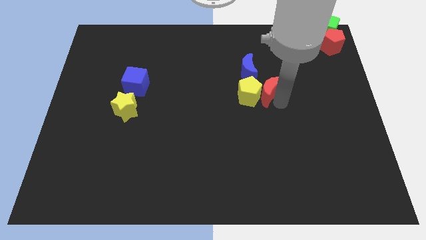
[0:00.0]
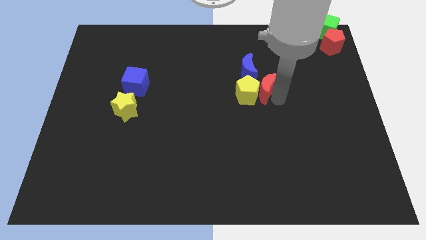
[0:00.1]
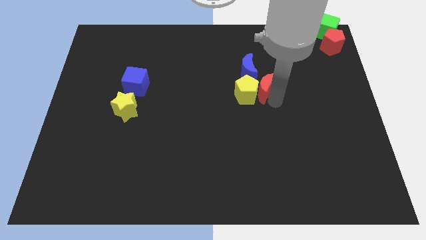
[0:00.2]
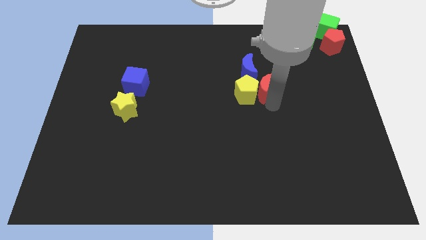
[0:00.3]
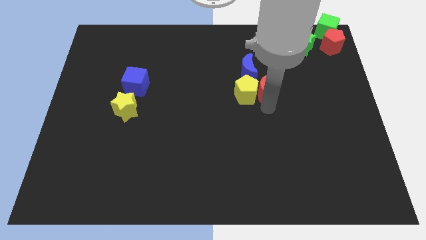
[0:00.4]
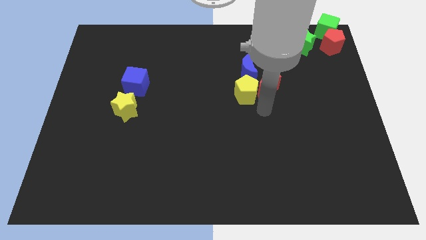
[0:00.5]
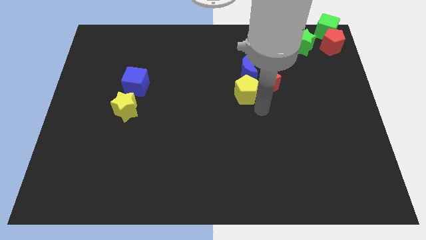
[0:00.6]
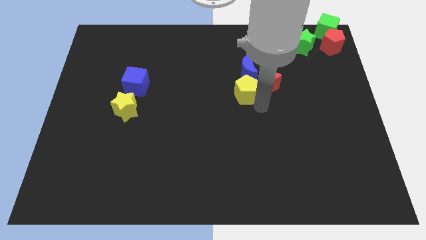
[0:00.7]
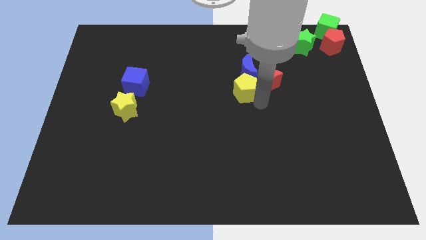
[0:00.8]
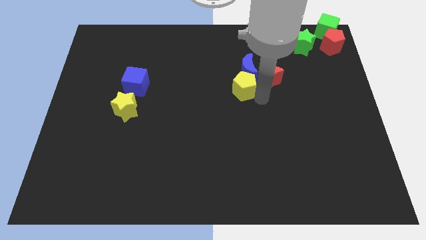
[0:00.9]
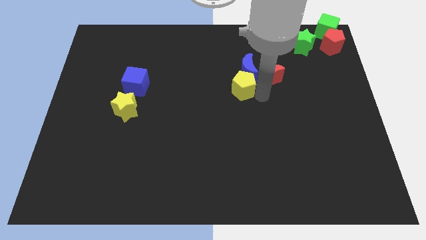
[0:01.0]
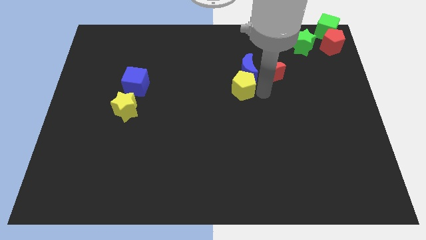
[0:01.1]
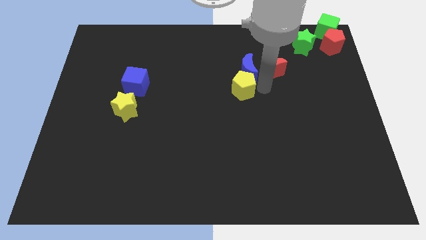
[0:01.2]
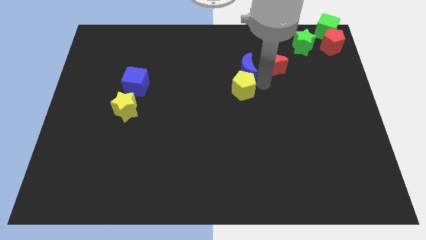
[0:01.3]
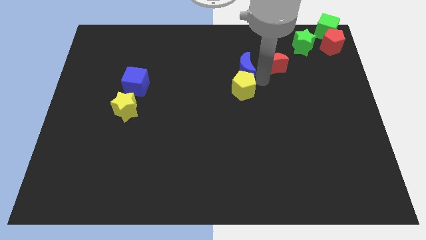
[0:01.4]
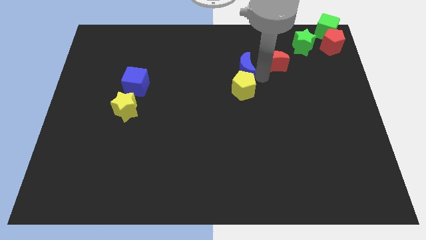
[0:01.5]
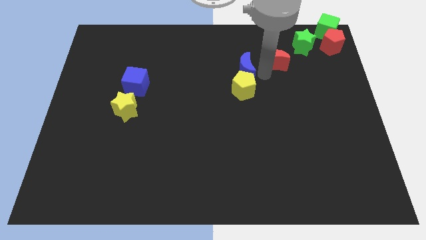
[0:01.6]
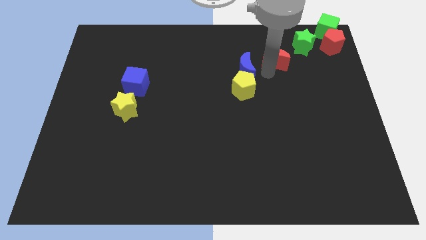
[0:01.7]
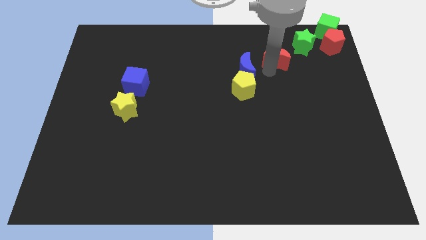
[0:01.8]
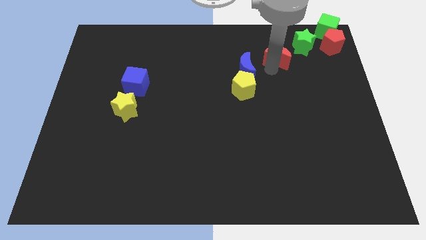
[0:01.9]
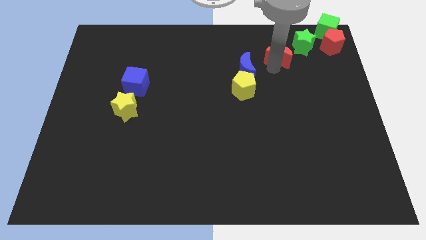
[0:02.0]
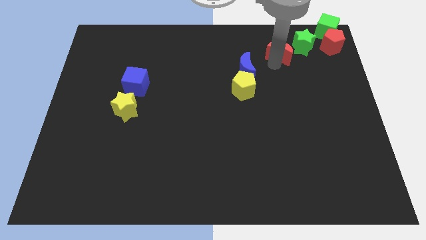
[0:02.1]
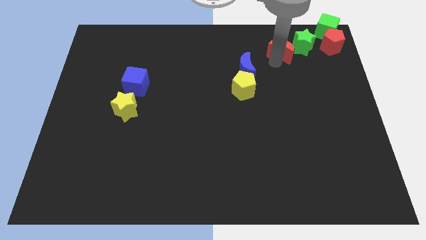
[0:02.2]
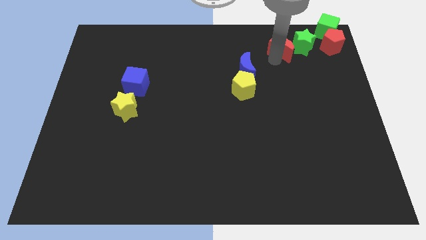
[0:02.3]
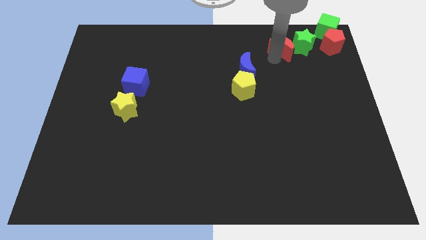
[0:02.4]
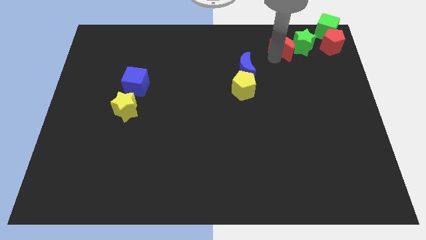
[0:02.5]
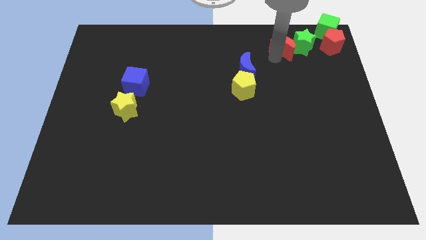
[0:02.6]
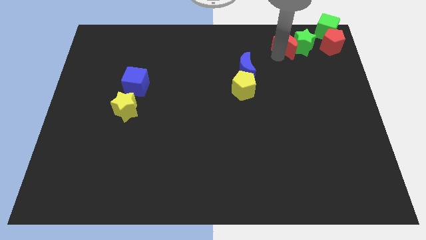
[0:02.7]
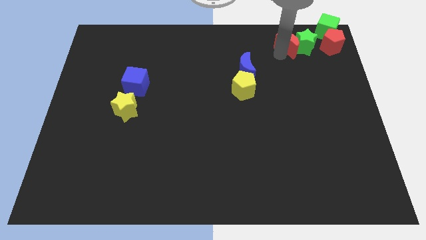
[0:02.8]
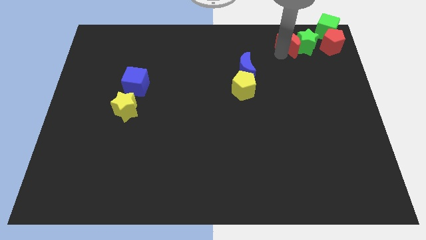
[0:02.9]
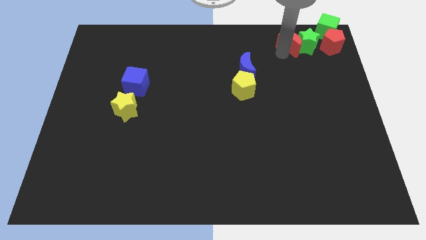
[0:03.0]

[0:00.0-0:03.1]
separate red moon from yellow pentagon

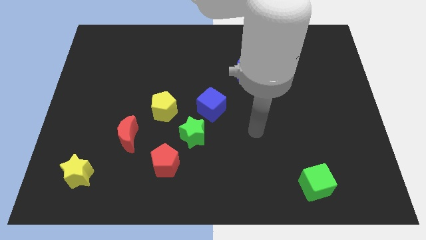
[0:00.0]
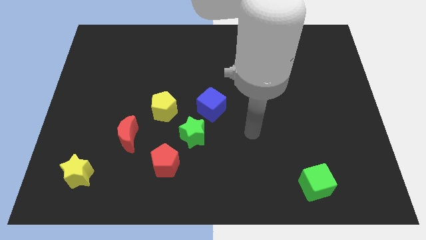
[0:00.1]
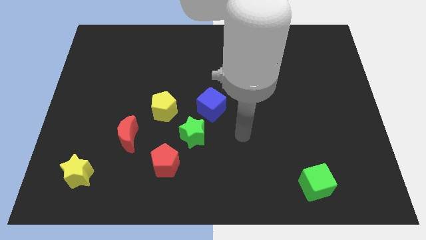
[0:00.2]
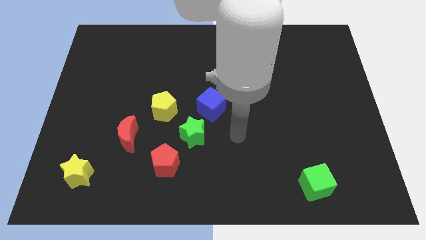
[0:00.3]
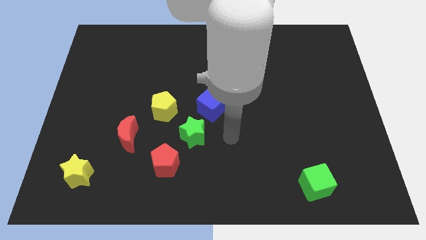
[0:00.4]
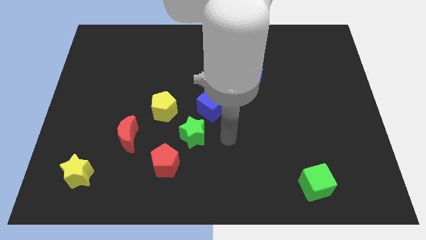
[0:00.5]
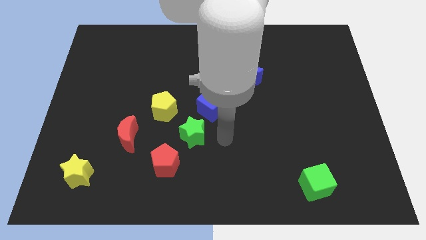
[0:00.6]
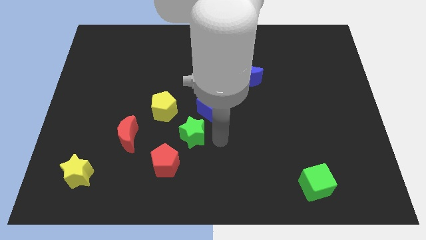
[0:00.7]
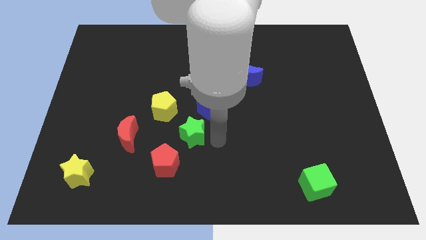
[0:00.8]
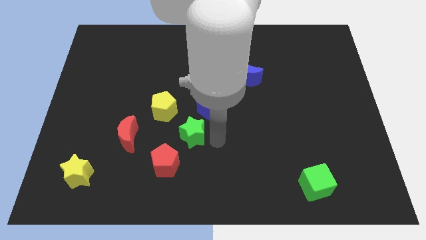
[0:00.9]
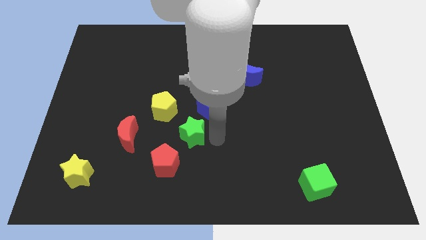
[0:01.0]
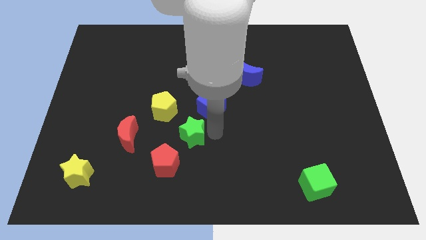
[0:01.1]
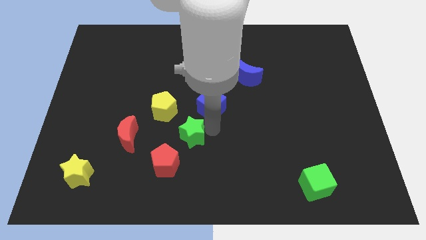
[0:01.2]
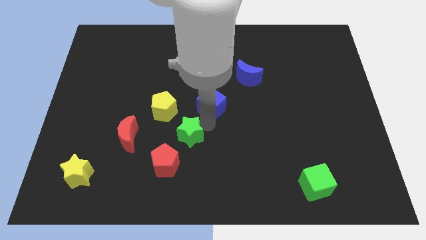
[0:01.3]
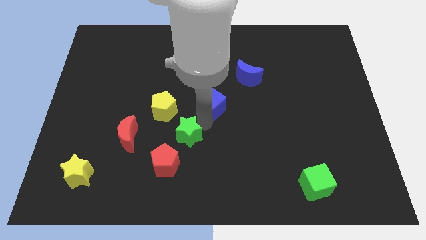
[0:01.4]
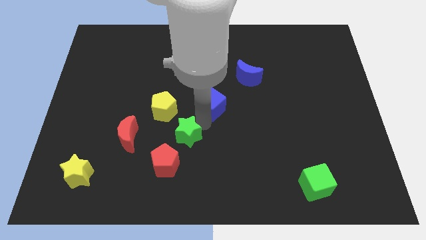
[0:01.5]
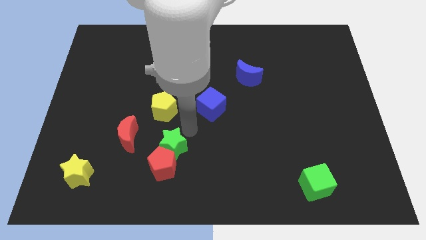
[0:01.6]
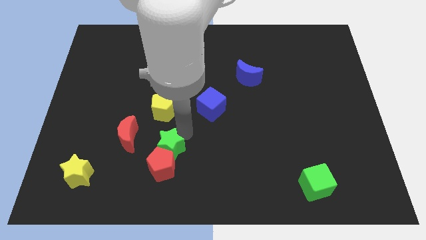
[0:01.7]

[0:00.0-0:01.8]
move the green star into the red pentagon

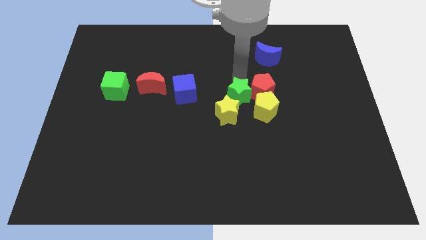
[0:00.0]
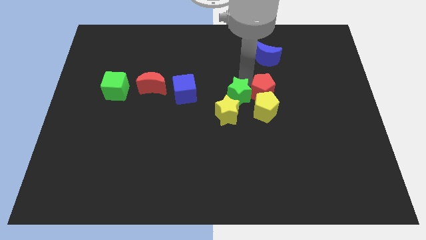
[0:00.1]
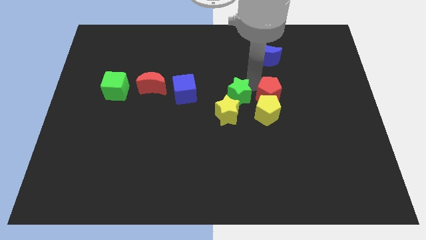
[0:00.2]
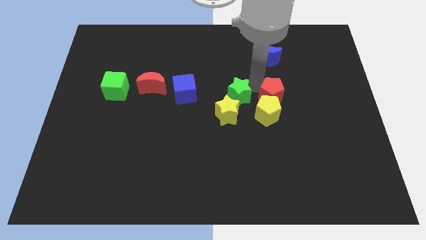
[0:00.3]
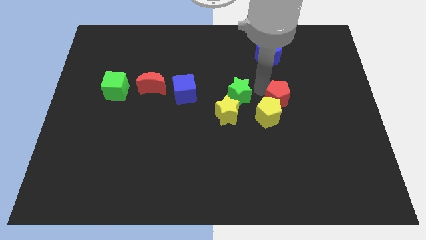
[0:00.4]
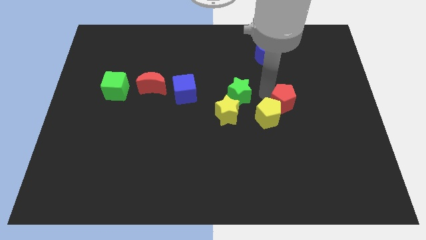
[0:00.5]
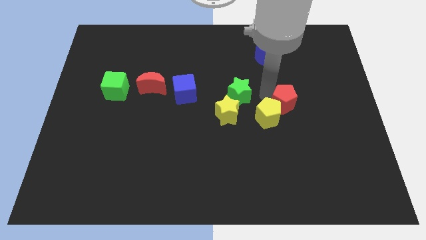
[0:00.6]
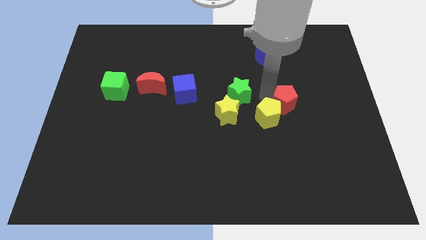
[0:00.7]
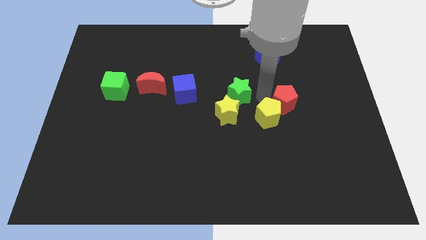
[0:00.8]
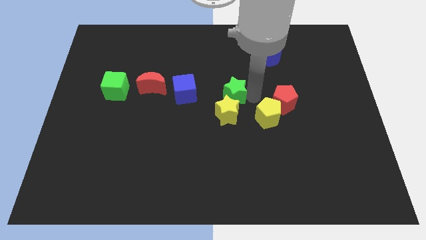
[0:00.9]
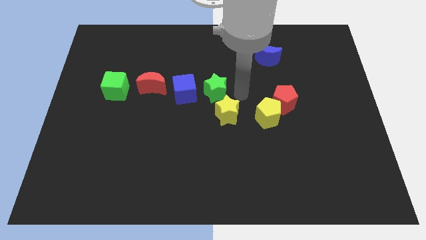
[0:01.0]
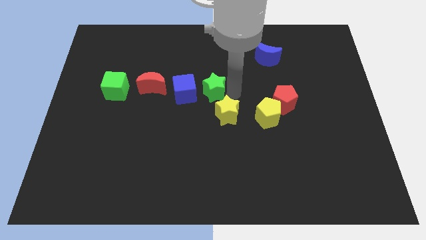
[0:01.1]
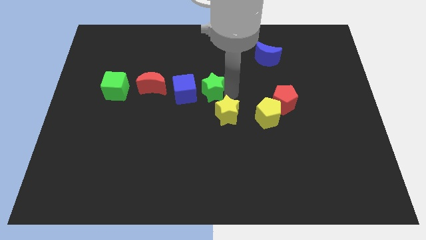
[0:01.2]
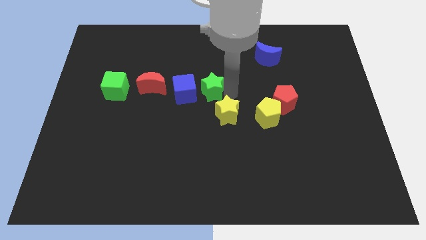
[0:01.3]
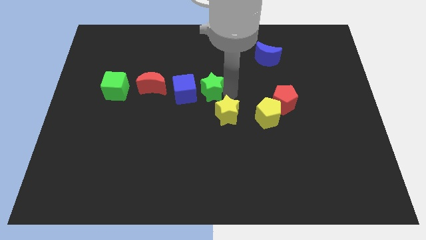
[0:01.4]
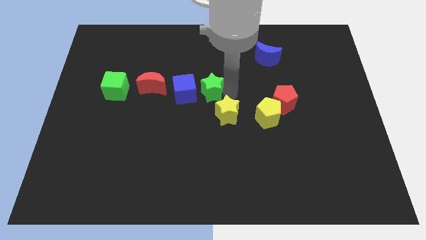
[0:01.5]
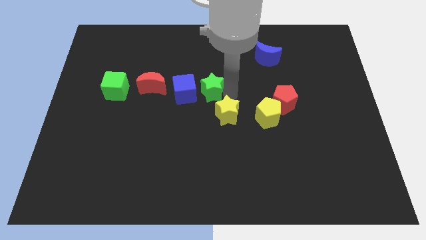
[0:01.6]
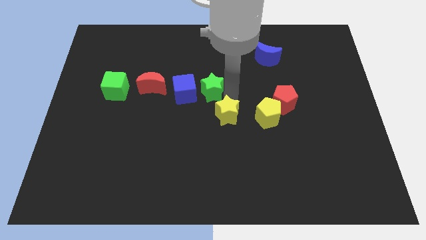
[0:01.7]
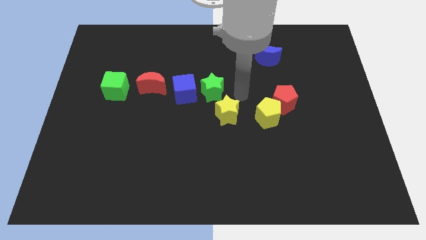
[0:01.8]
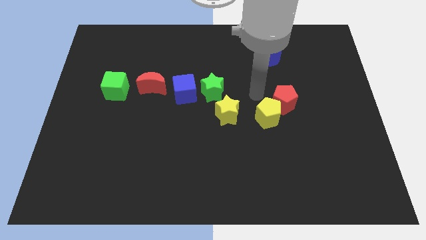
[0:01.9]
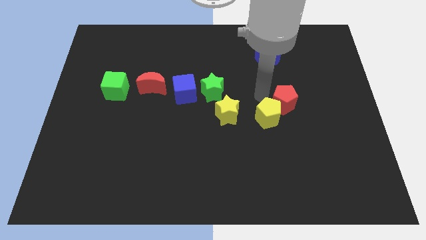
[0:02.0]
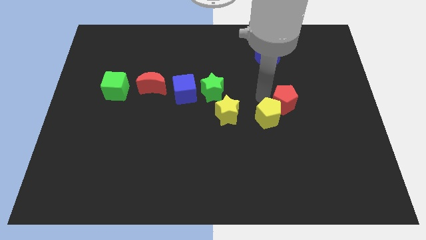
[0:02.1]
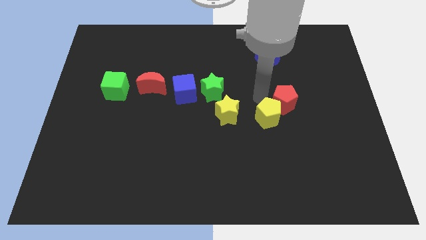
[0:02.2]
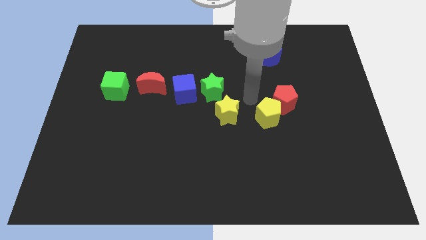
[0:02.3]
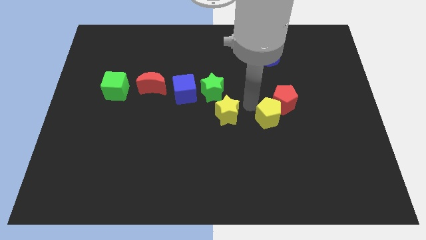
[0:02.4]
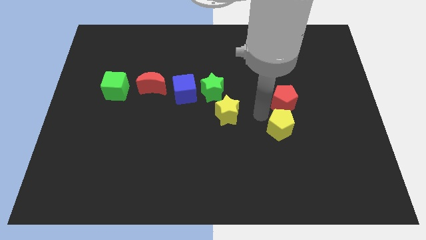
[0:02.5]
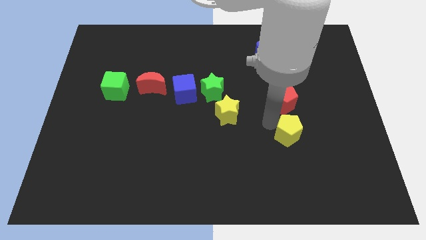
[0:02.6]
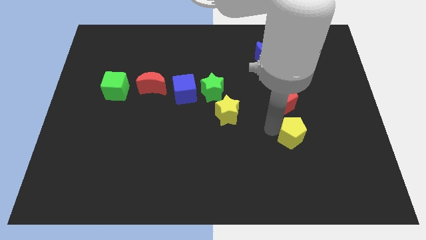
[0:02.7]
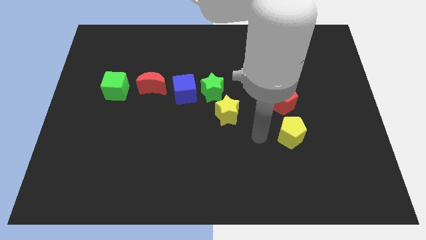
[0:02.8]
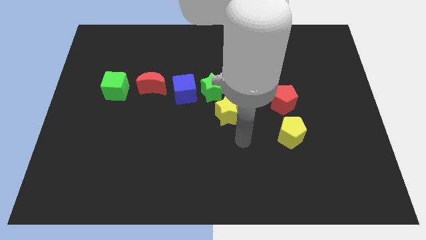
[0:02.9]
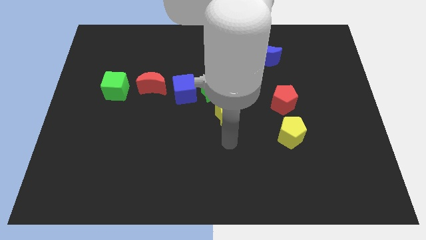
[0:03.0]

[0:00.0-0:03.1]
move the green star next to the blue cube

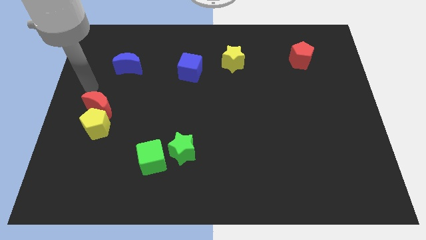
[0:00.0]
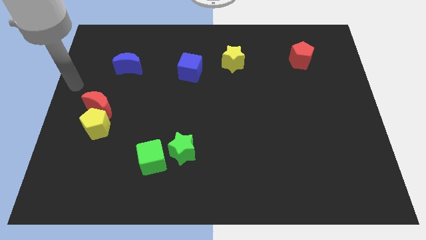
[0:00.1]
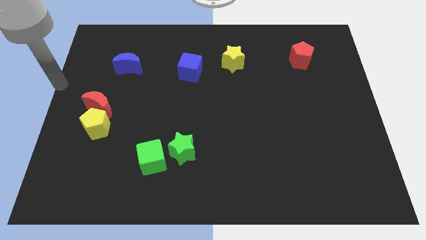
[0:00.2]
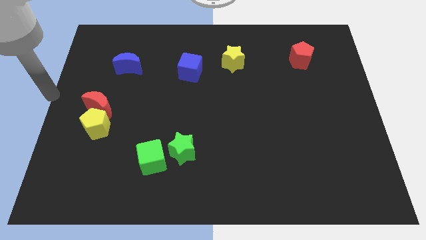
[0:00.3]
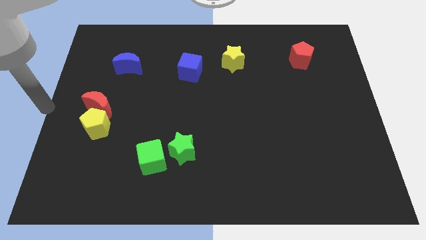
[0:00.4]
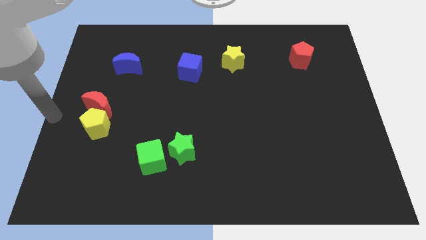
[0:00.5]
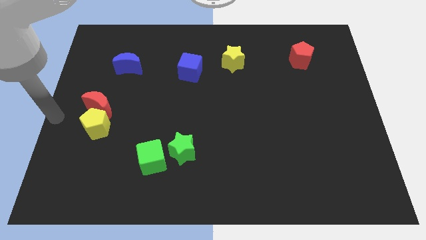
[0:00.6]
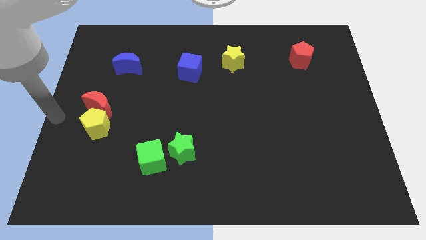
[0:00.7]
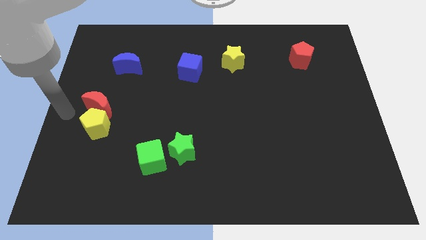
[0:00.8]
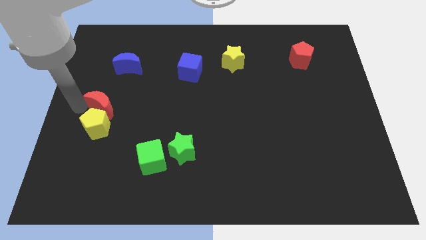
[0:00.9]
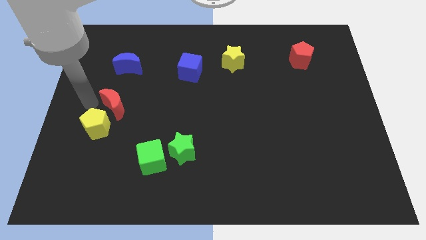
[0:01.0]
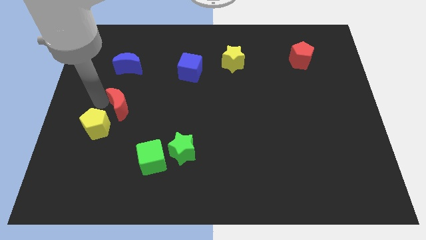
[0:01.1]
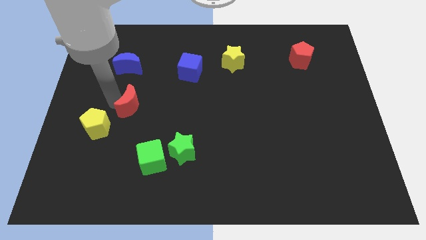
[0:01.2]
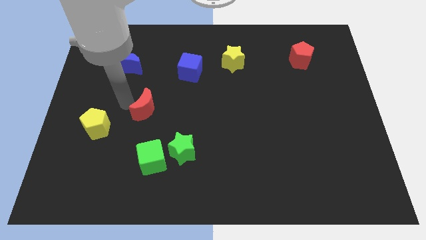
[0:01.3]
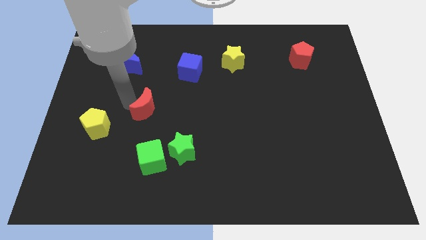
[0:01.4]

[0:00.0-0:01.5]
move the red crescent to the right of the board
